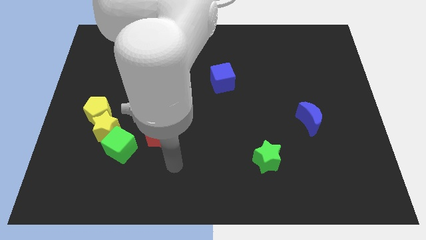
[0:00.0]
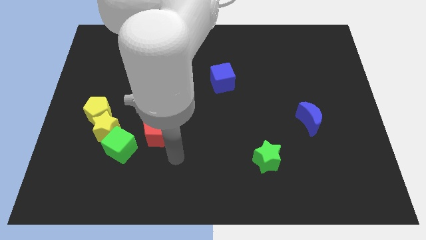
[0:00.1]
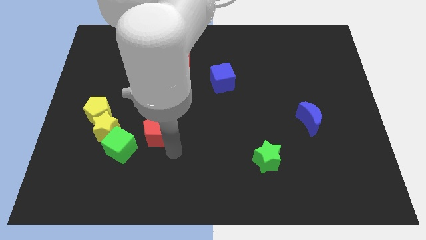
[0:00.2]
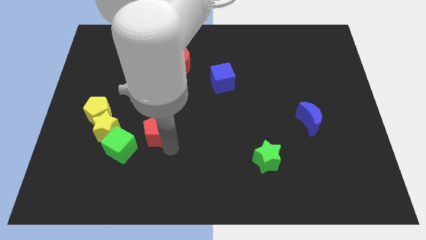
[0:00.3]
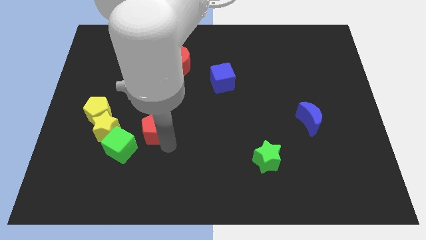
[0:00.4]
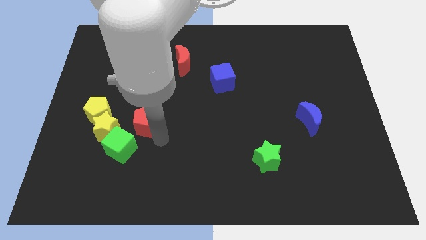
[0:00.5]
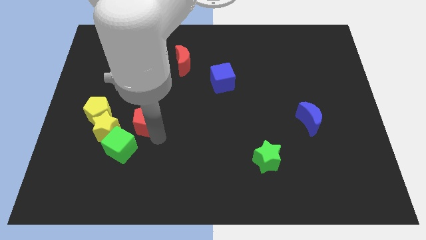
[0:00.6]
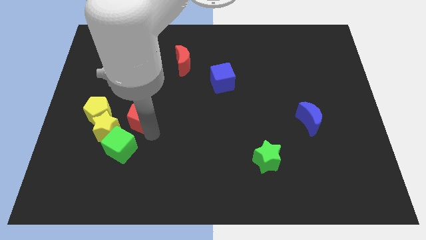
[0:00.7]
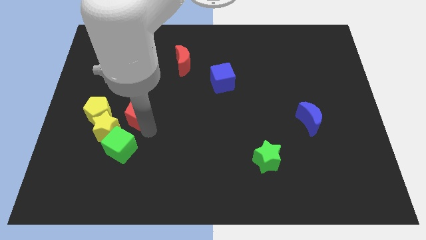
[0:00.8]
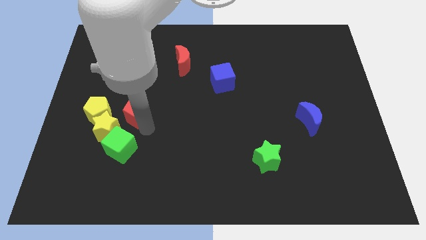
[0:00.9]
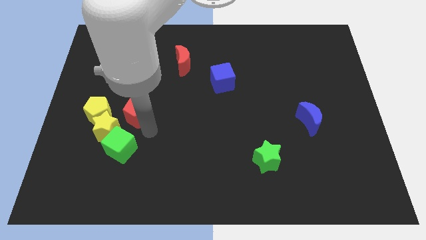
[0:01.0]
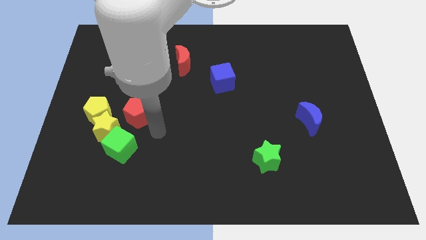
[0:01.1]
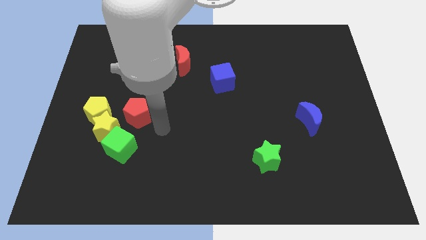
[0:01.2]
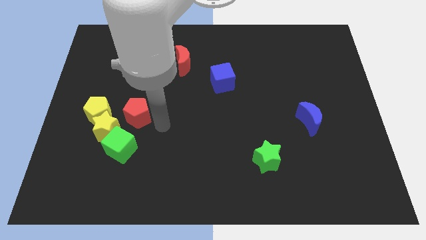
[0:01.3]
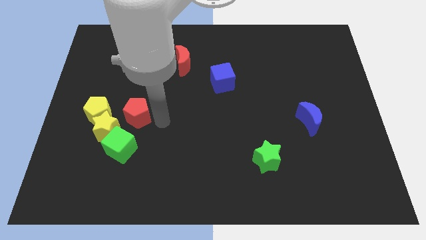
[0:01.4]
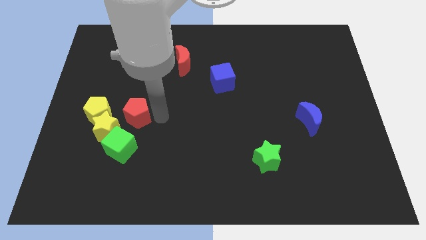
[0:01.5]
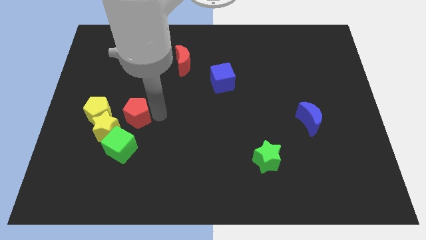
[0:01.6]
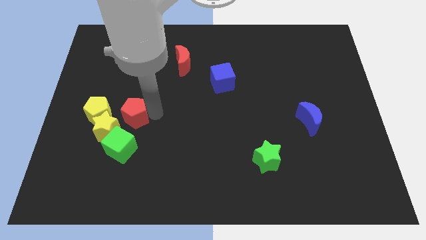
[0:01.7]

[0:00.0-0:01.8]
push the red pentagon towards the yellow pentagon

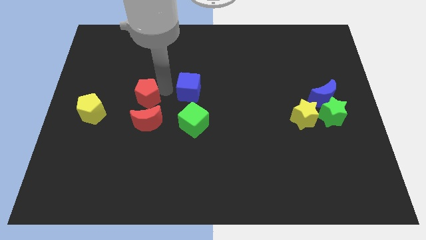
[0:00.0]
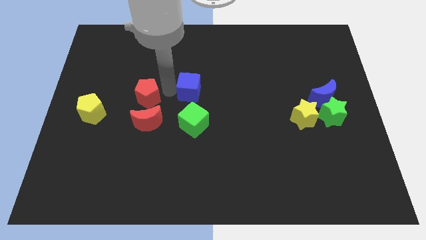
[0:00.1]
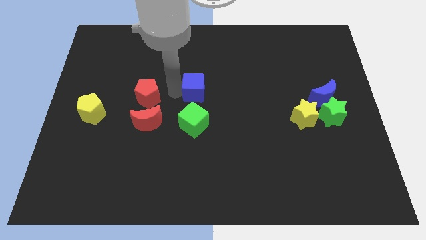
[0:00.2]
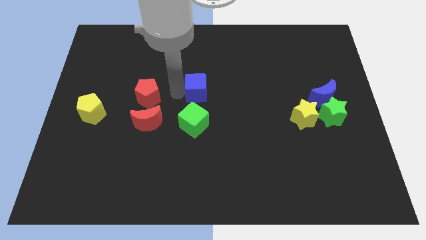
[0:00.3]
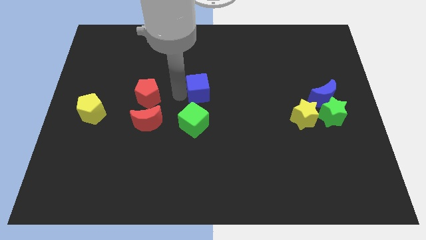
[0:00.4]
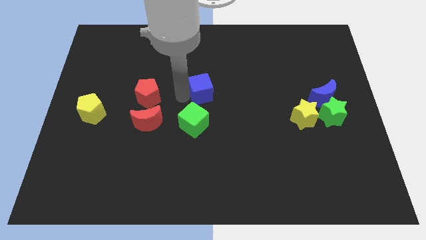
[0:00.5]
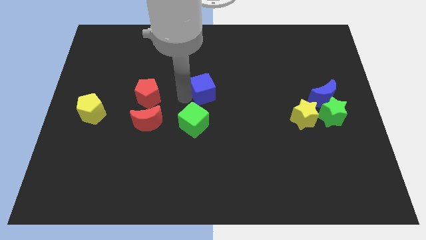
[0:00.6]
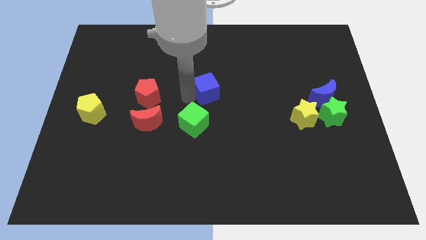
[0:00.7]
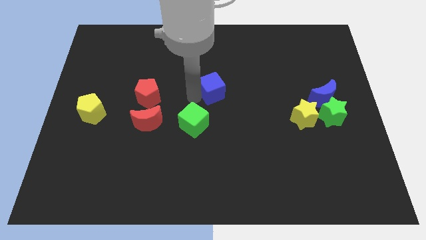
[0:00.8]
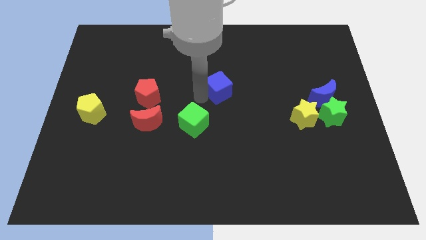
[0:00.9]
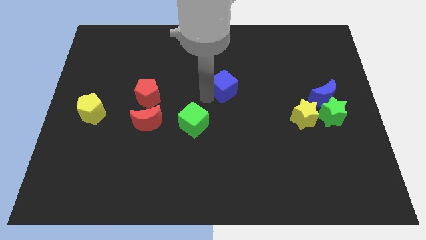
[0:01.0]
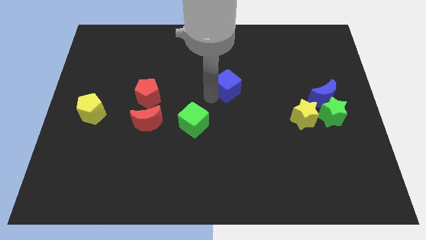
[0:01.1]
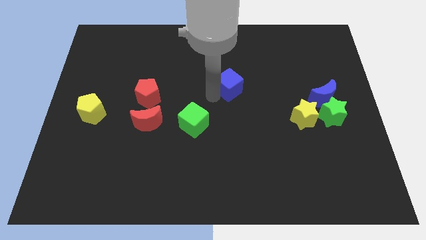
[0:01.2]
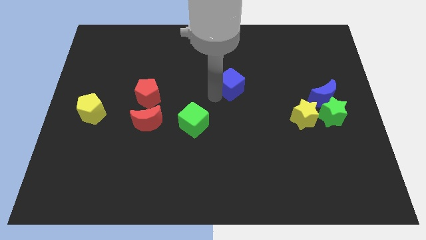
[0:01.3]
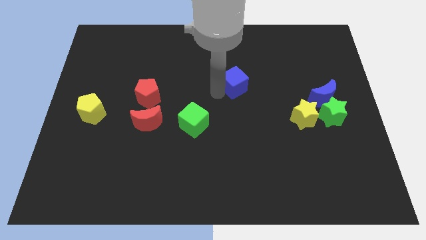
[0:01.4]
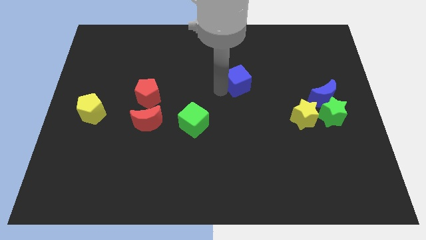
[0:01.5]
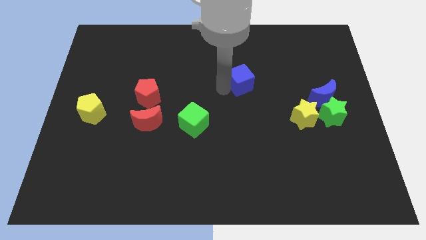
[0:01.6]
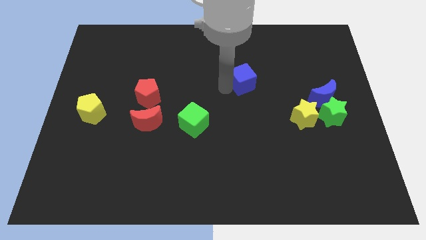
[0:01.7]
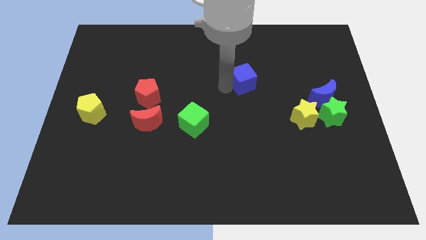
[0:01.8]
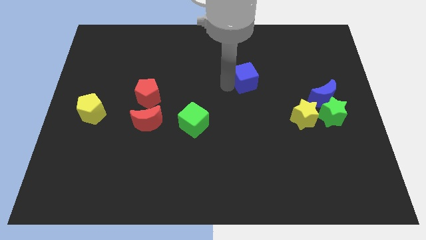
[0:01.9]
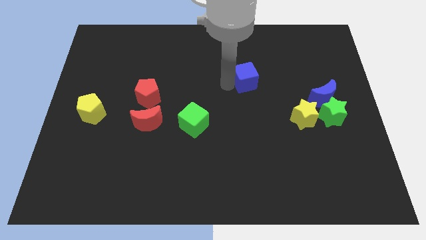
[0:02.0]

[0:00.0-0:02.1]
move the blue square towards the right side

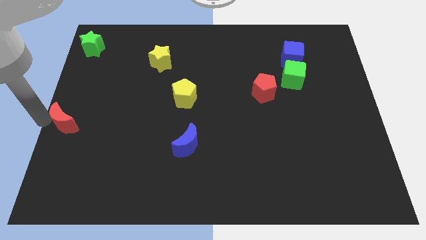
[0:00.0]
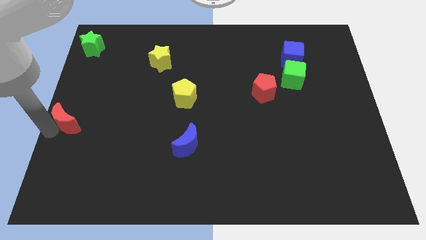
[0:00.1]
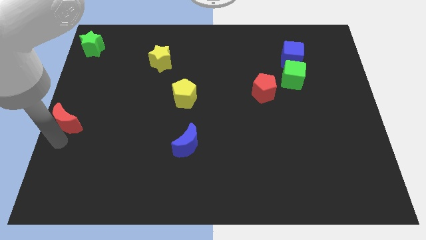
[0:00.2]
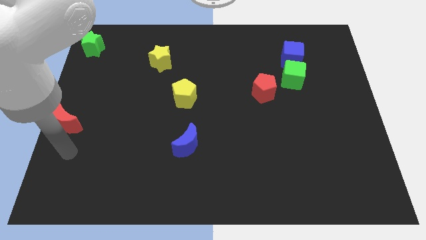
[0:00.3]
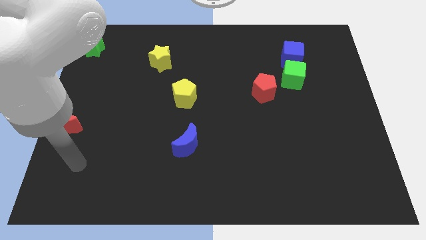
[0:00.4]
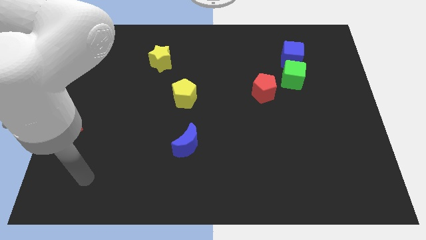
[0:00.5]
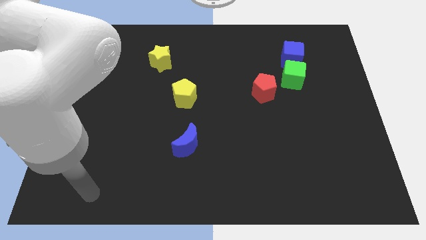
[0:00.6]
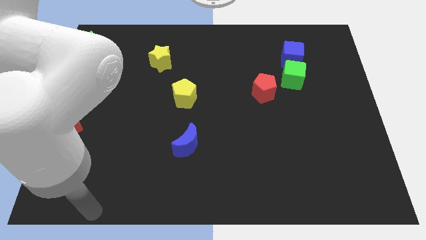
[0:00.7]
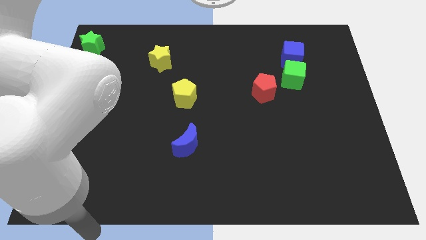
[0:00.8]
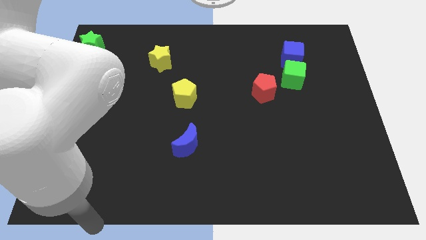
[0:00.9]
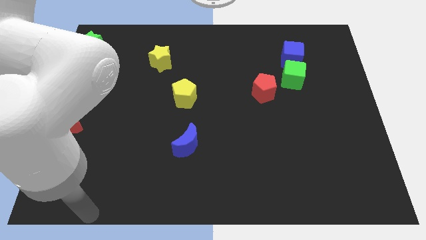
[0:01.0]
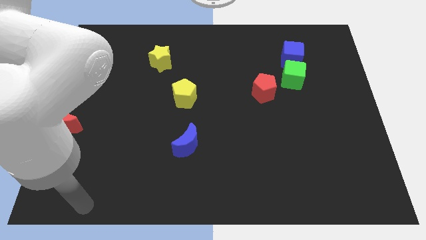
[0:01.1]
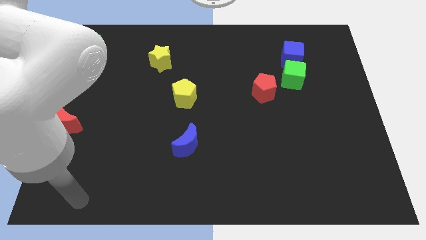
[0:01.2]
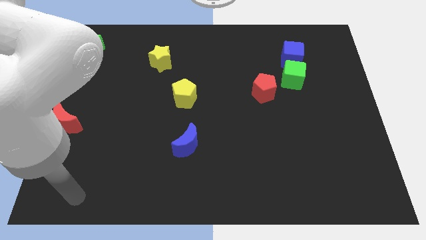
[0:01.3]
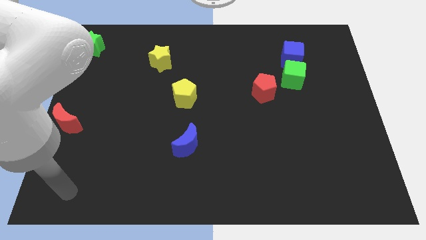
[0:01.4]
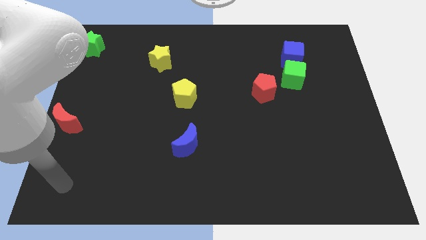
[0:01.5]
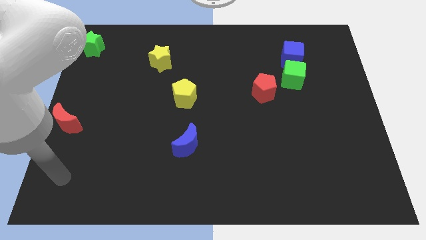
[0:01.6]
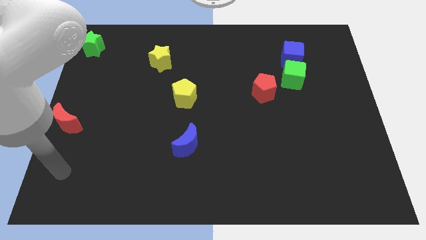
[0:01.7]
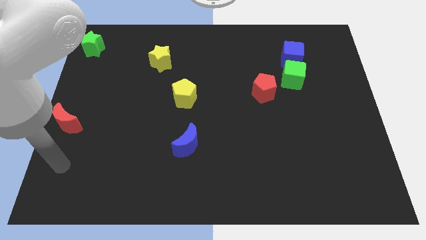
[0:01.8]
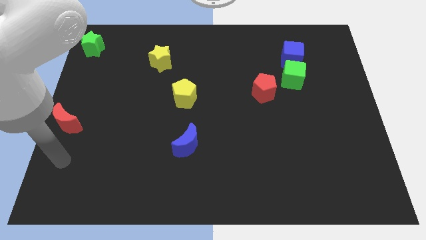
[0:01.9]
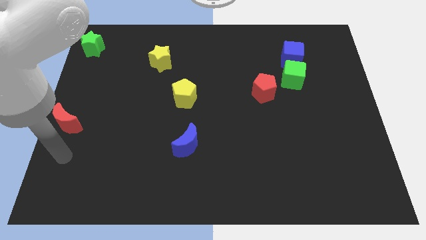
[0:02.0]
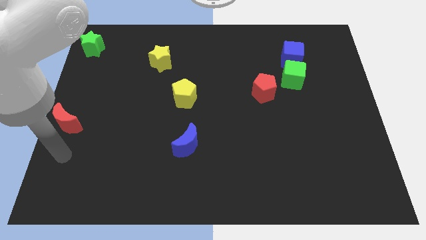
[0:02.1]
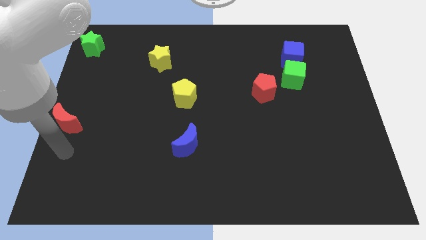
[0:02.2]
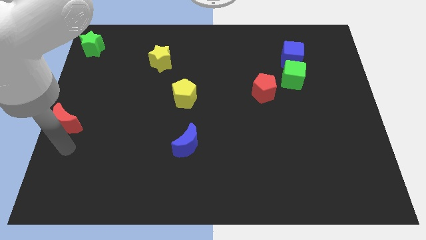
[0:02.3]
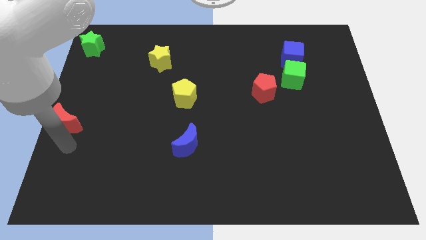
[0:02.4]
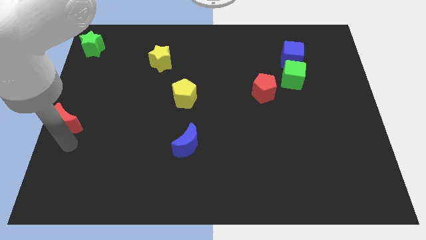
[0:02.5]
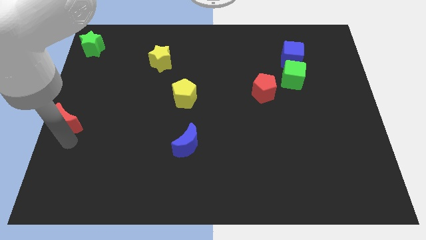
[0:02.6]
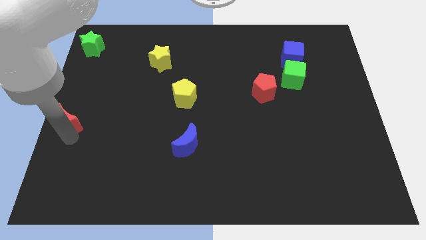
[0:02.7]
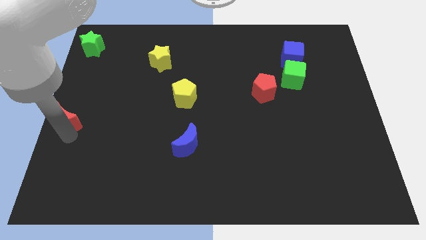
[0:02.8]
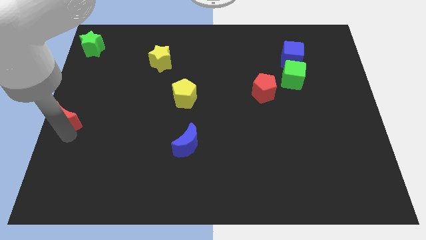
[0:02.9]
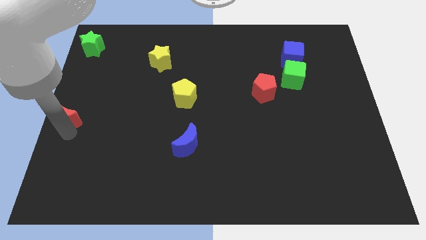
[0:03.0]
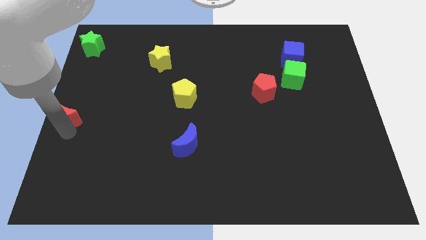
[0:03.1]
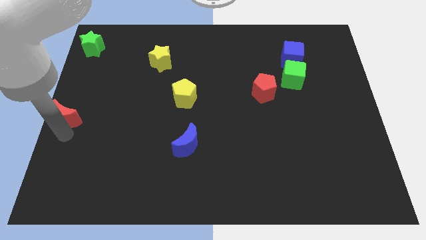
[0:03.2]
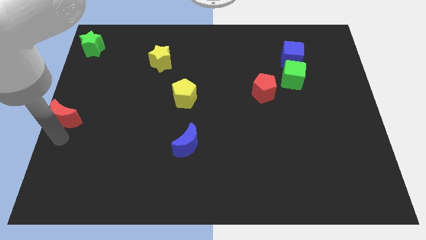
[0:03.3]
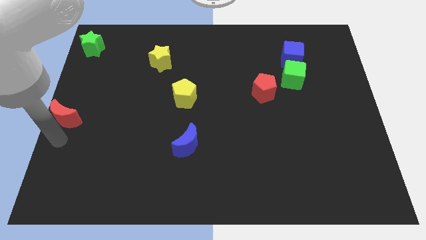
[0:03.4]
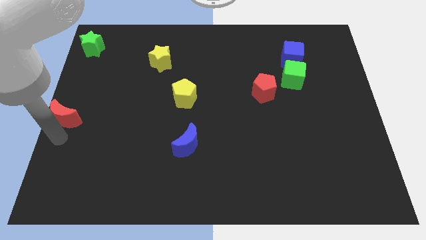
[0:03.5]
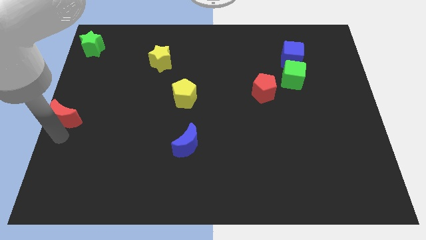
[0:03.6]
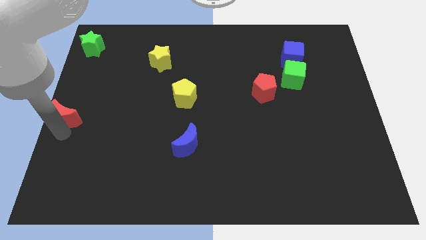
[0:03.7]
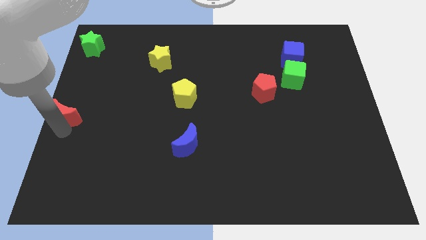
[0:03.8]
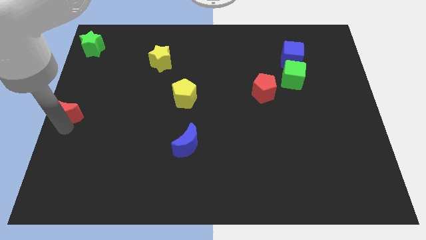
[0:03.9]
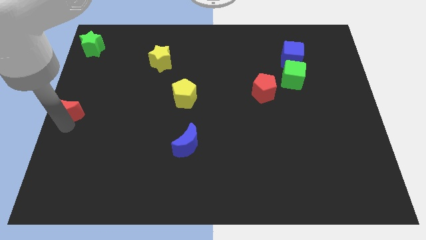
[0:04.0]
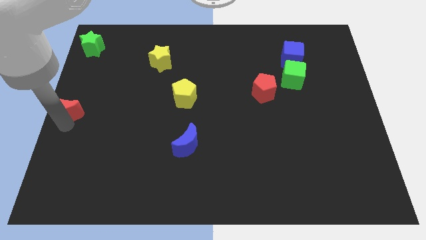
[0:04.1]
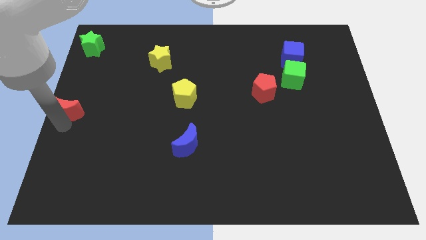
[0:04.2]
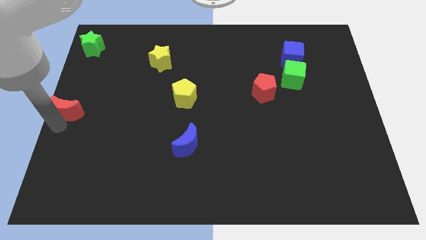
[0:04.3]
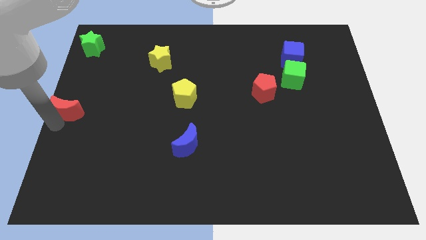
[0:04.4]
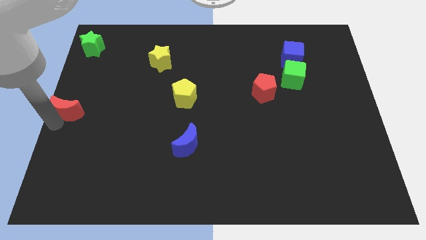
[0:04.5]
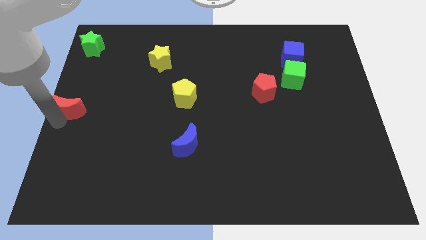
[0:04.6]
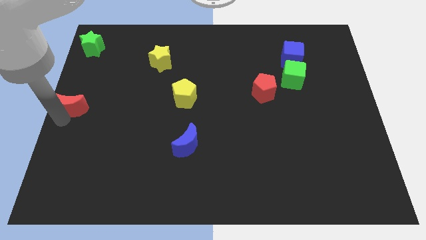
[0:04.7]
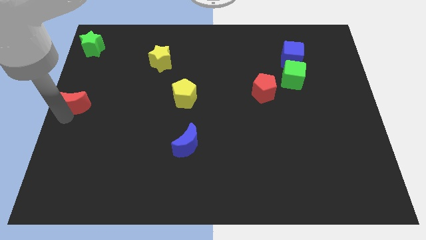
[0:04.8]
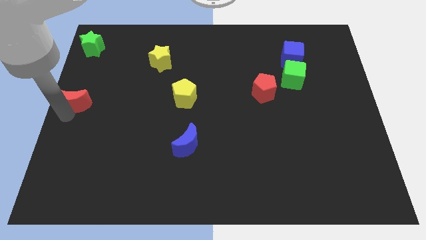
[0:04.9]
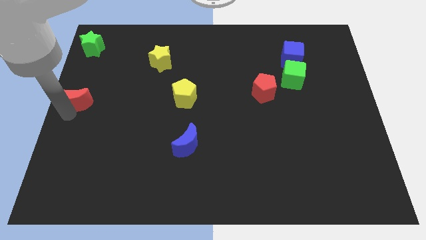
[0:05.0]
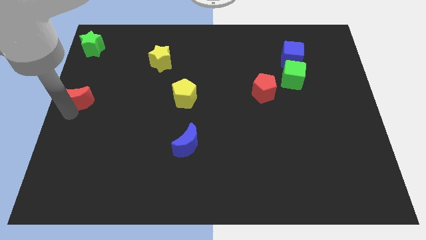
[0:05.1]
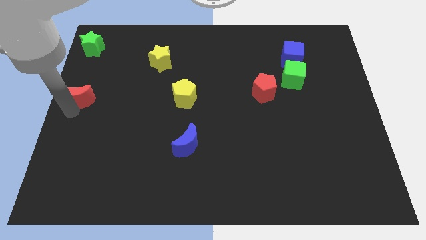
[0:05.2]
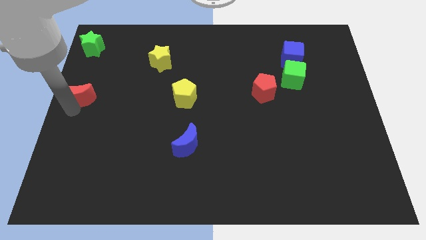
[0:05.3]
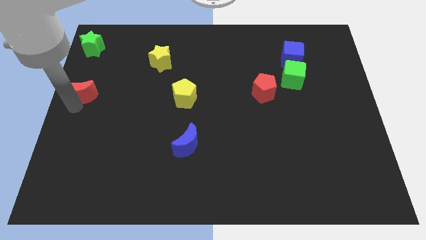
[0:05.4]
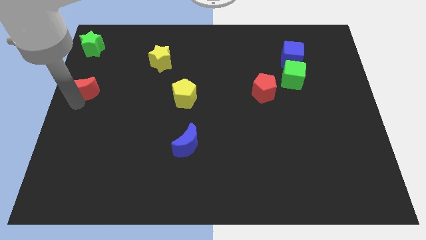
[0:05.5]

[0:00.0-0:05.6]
put the red moon parallel left to the yellow pentagon
